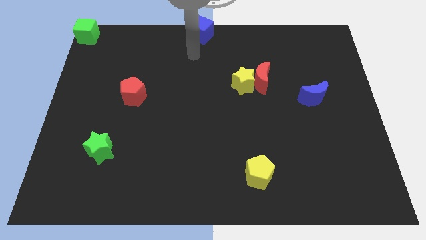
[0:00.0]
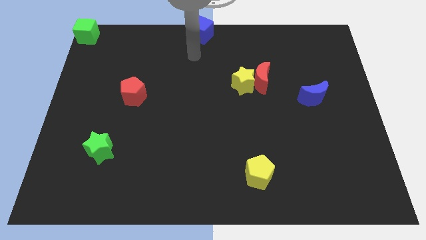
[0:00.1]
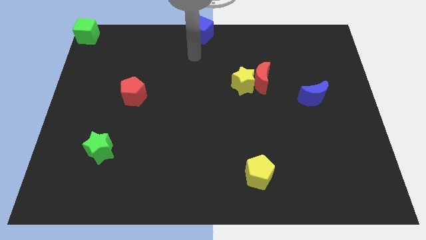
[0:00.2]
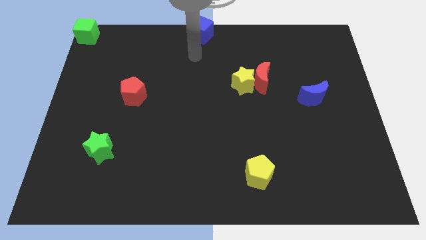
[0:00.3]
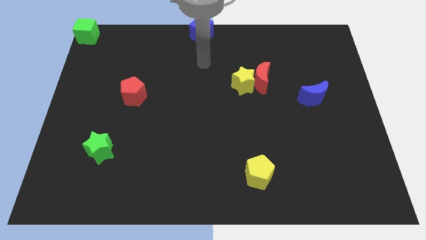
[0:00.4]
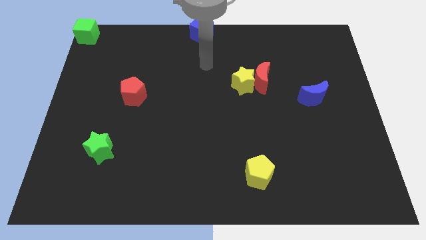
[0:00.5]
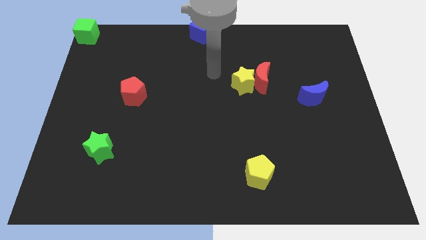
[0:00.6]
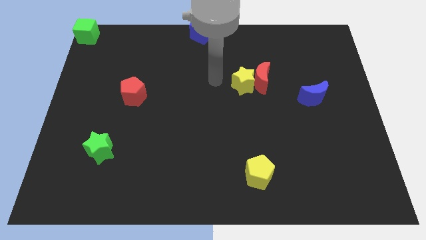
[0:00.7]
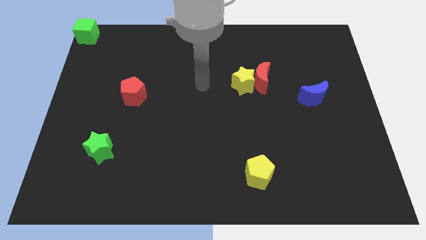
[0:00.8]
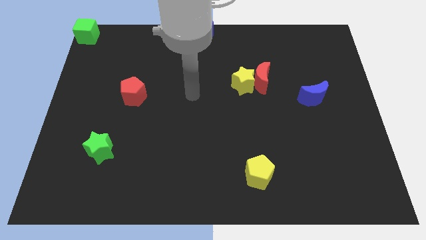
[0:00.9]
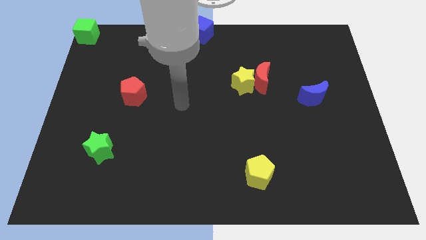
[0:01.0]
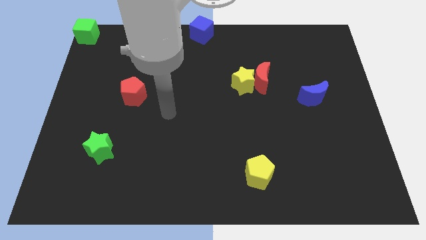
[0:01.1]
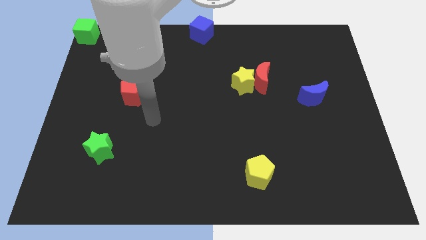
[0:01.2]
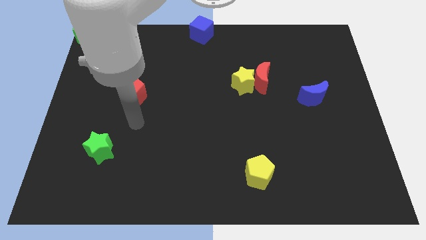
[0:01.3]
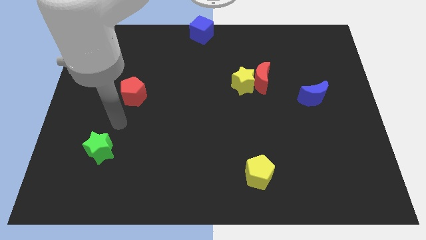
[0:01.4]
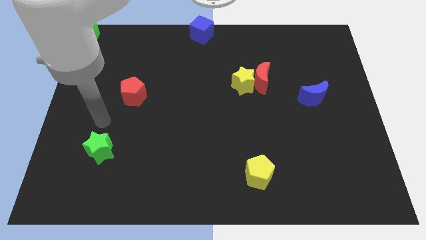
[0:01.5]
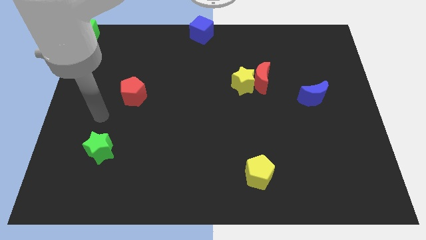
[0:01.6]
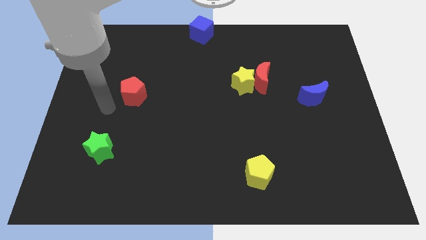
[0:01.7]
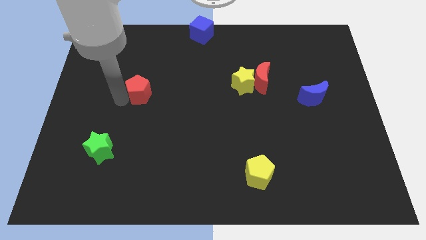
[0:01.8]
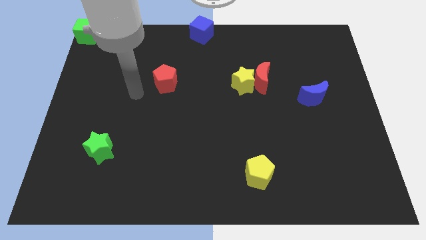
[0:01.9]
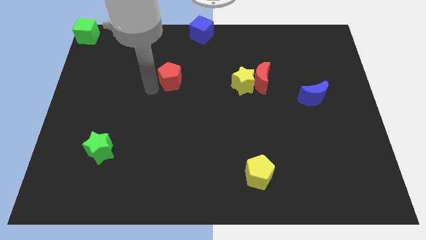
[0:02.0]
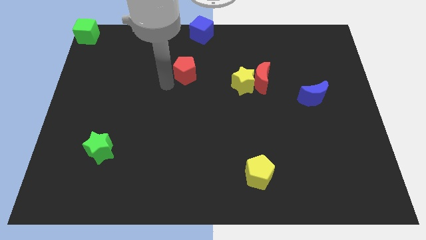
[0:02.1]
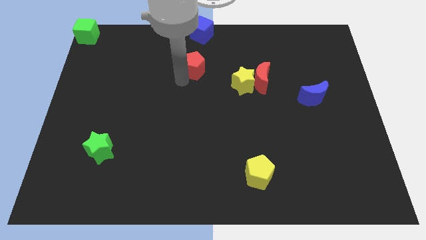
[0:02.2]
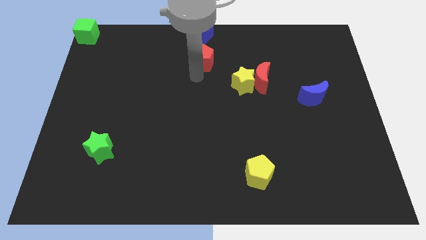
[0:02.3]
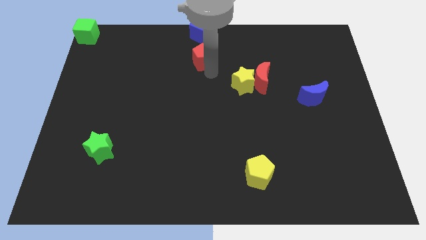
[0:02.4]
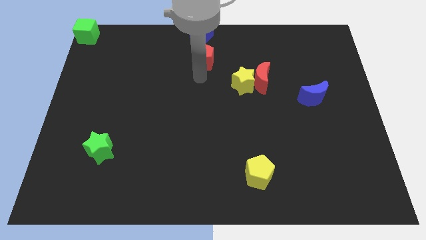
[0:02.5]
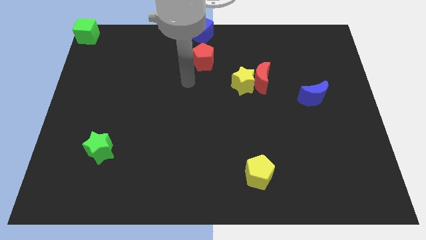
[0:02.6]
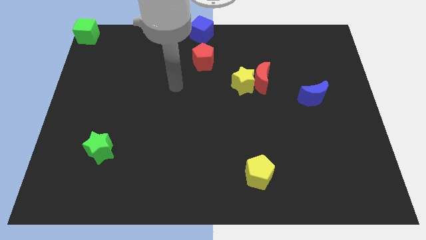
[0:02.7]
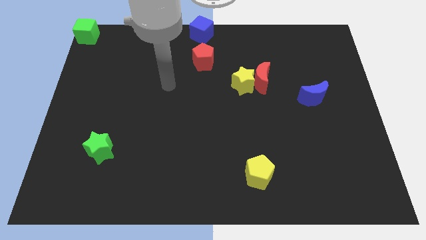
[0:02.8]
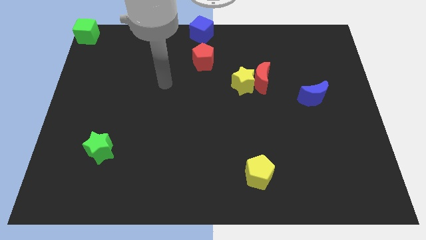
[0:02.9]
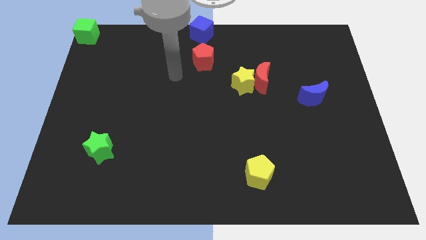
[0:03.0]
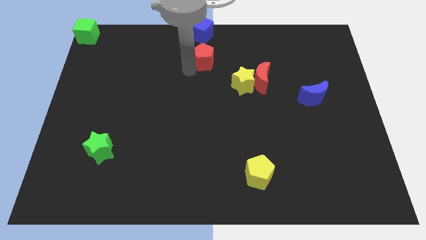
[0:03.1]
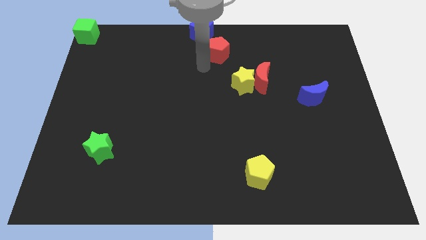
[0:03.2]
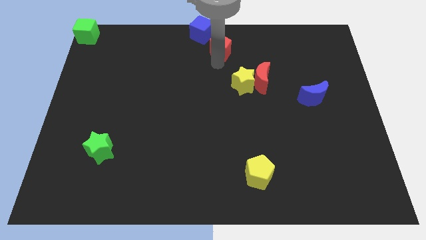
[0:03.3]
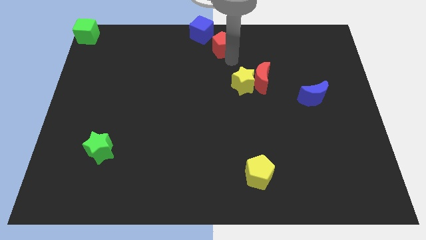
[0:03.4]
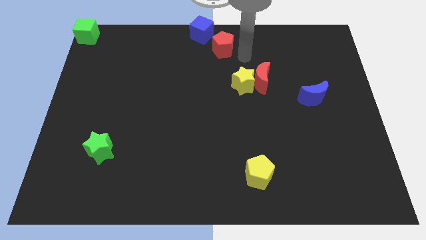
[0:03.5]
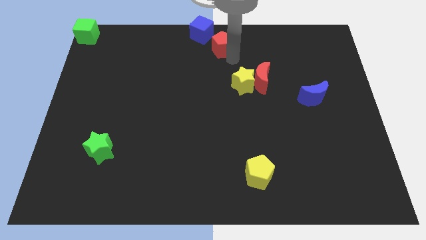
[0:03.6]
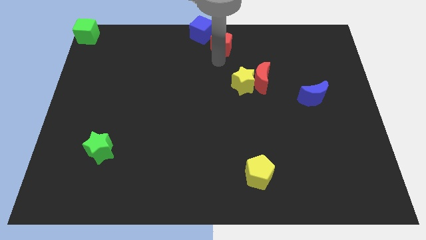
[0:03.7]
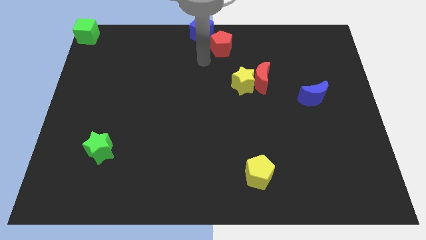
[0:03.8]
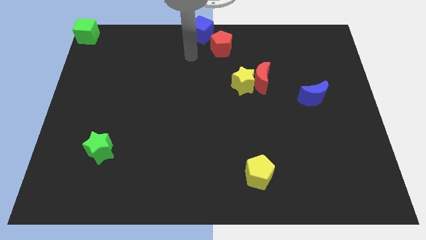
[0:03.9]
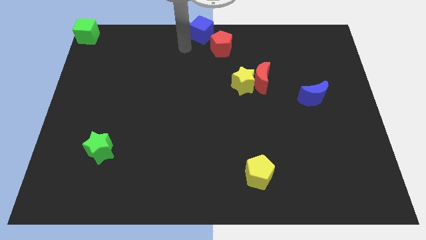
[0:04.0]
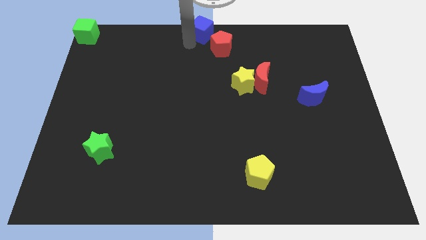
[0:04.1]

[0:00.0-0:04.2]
push the red pentagon near the blue cube

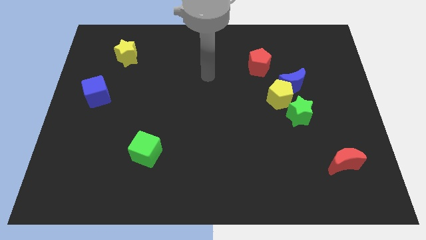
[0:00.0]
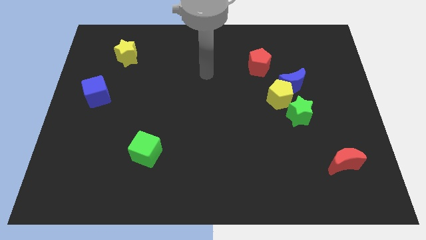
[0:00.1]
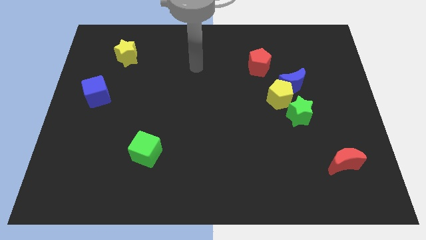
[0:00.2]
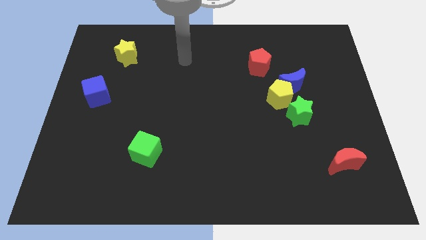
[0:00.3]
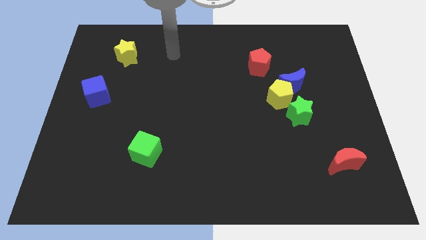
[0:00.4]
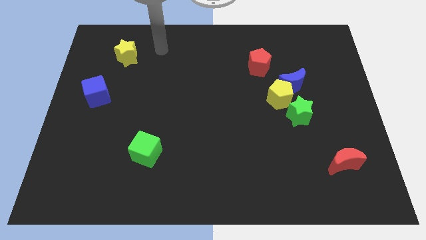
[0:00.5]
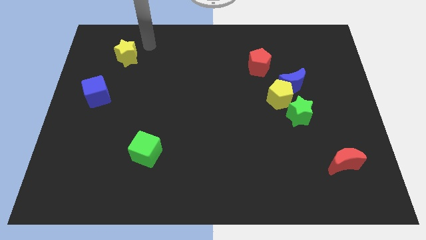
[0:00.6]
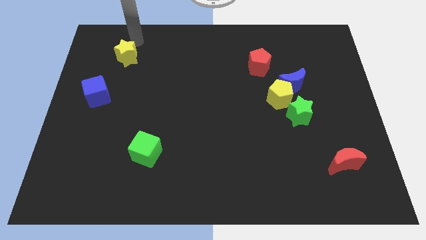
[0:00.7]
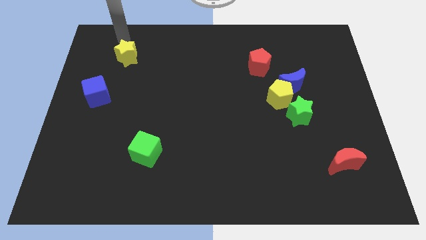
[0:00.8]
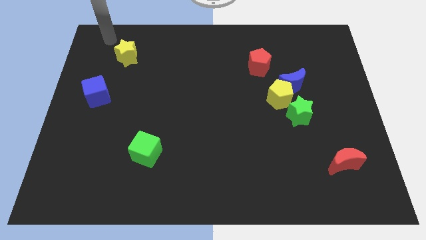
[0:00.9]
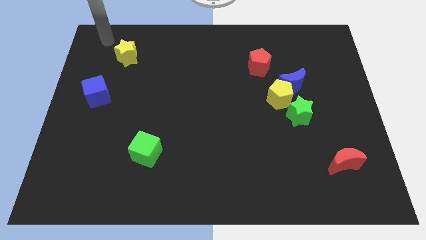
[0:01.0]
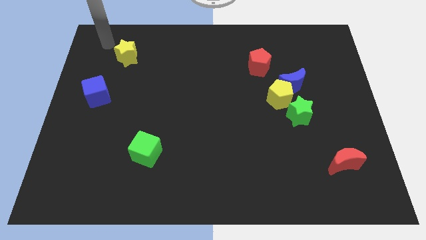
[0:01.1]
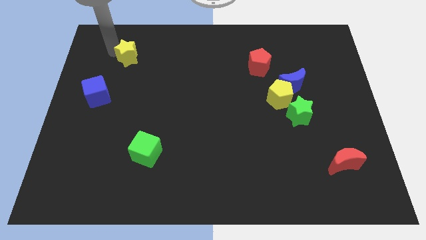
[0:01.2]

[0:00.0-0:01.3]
place your arm to the top left of yellow star

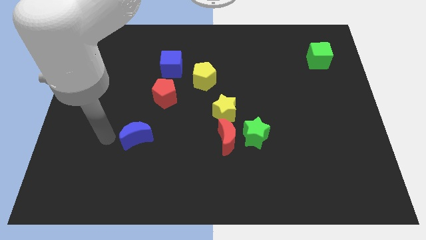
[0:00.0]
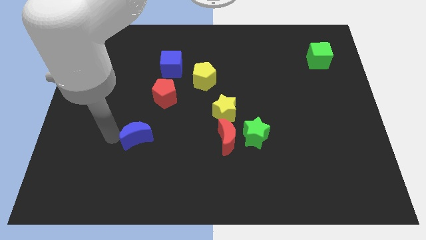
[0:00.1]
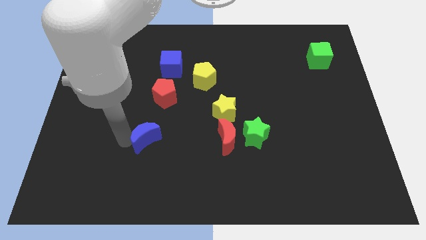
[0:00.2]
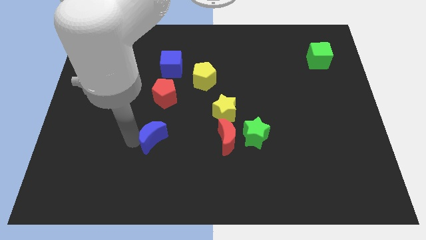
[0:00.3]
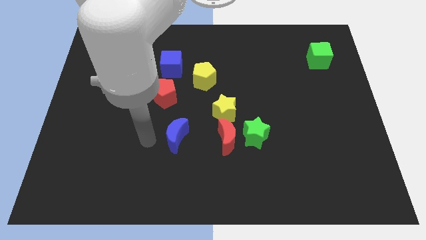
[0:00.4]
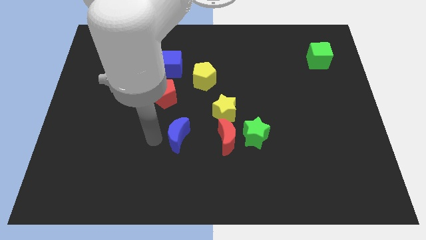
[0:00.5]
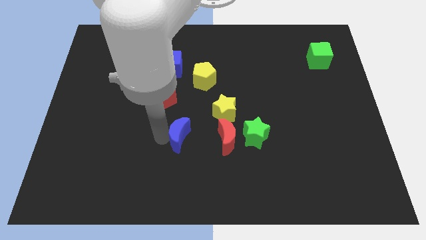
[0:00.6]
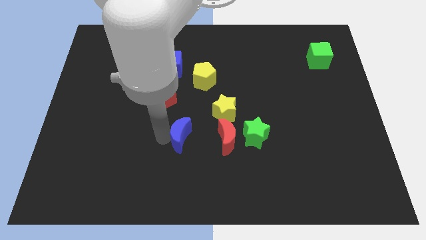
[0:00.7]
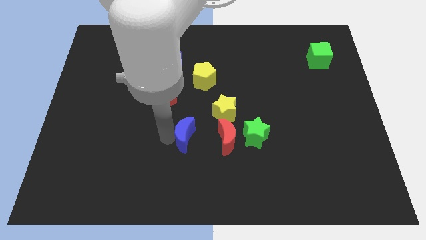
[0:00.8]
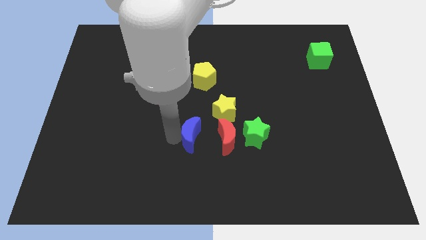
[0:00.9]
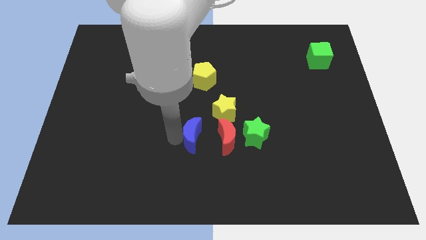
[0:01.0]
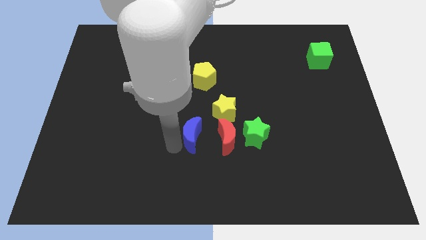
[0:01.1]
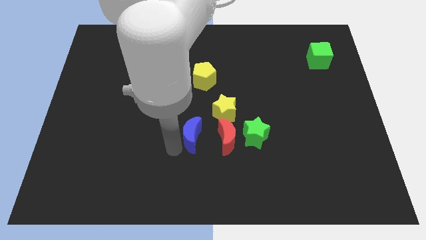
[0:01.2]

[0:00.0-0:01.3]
move blue crescent to the left of red moon

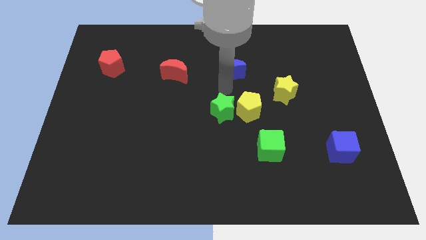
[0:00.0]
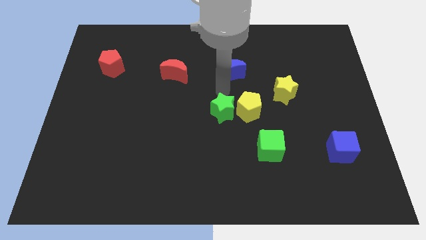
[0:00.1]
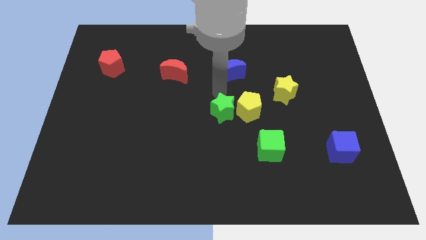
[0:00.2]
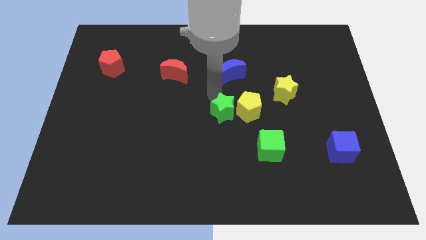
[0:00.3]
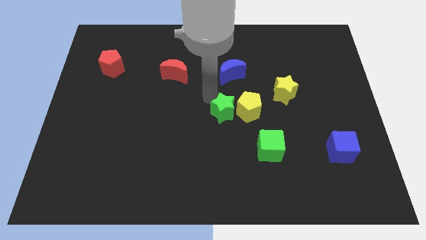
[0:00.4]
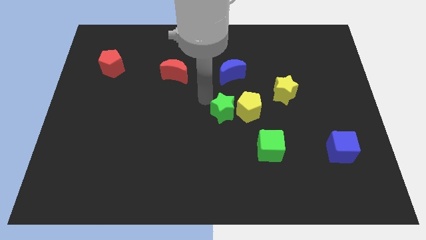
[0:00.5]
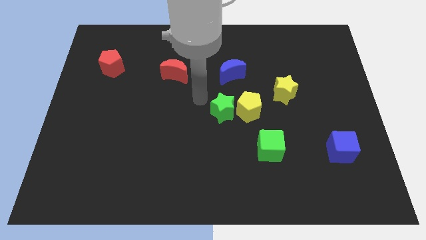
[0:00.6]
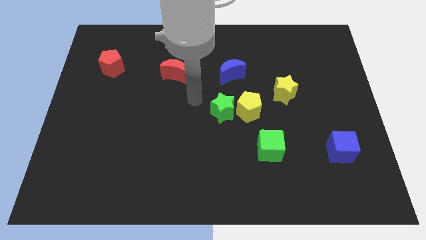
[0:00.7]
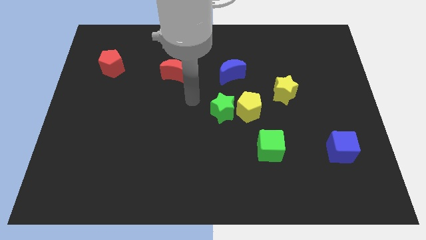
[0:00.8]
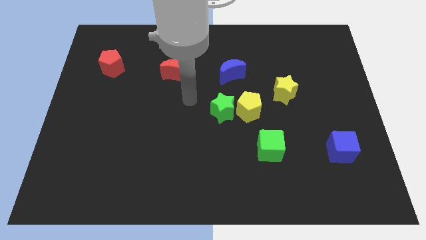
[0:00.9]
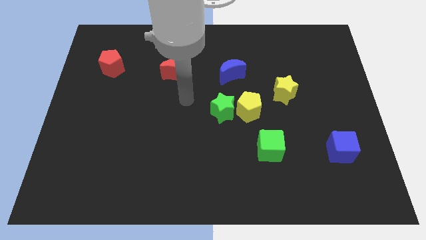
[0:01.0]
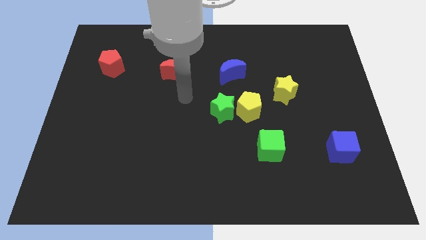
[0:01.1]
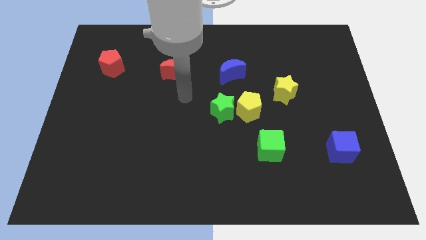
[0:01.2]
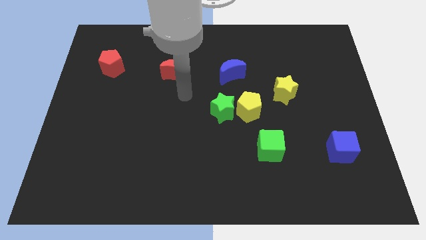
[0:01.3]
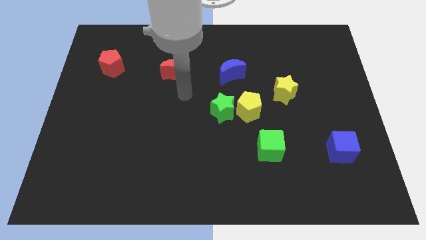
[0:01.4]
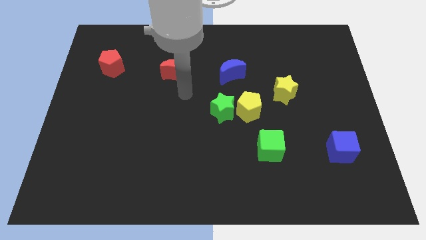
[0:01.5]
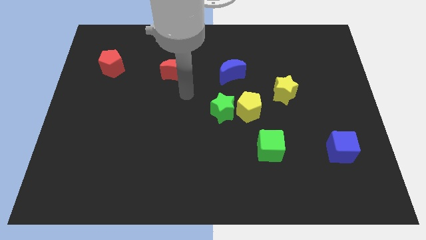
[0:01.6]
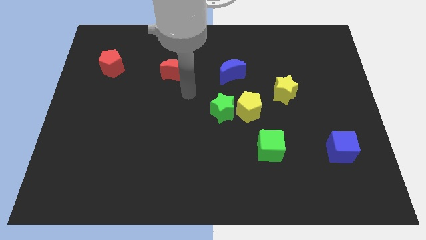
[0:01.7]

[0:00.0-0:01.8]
move your arm towards the right of the red crescent

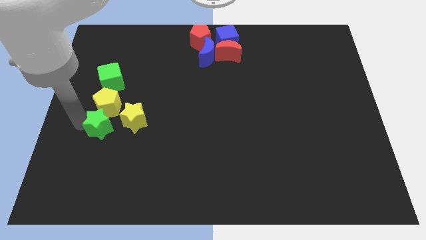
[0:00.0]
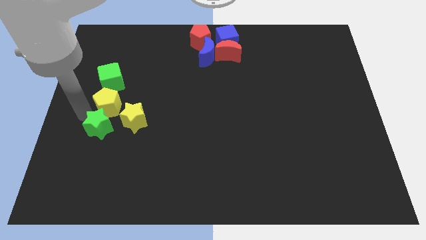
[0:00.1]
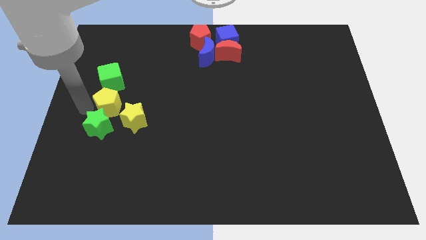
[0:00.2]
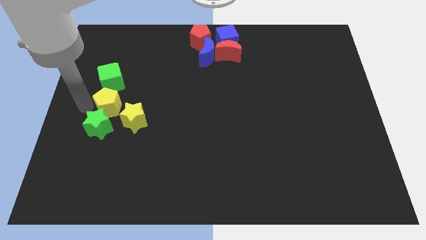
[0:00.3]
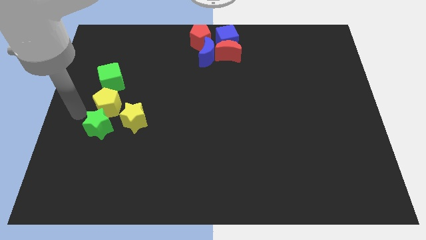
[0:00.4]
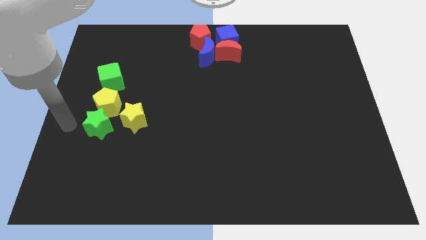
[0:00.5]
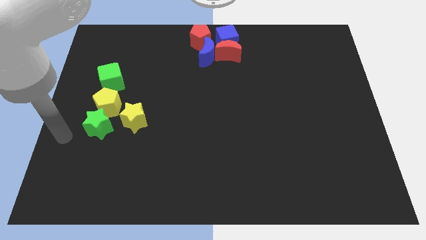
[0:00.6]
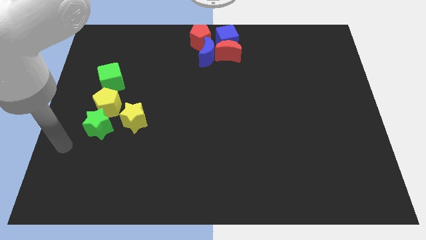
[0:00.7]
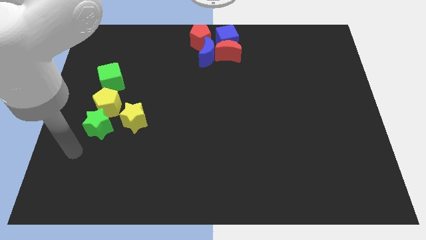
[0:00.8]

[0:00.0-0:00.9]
move the arm away from the yellow pentagon
